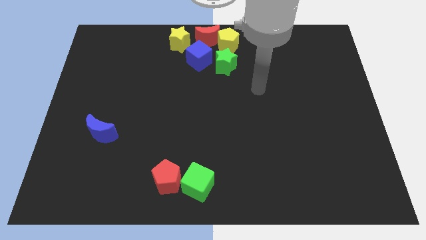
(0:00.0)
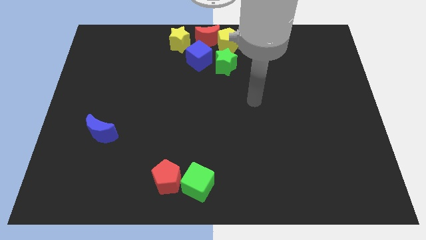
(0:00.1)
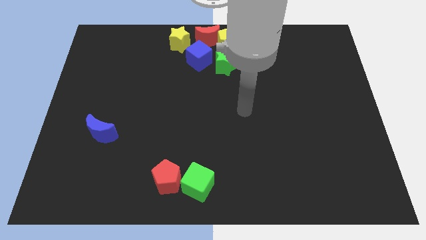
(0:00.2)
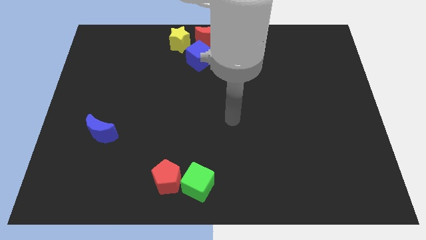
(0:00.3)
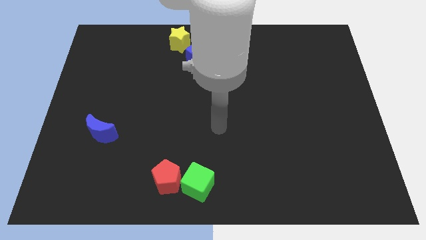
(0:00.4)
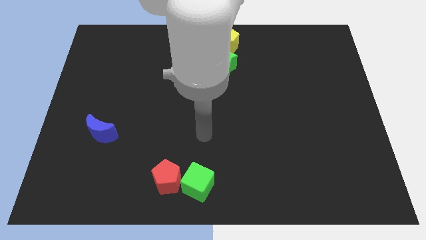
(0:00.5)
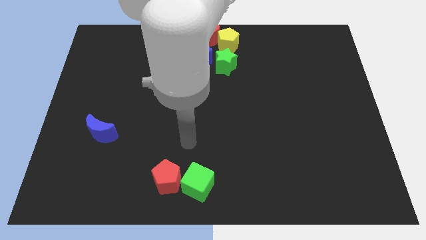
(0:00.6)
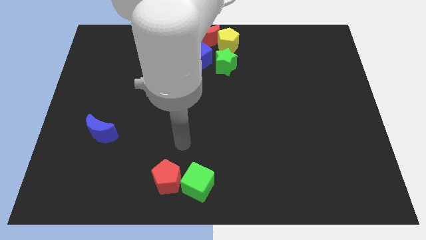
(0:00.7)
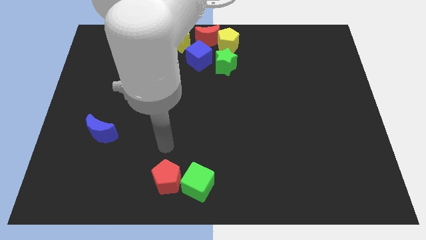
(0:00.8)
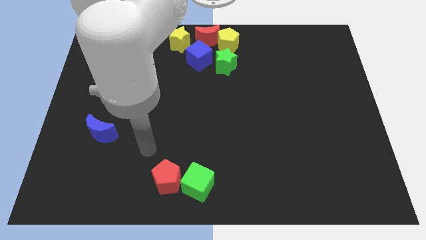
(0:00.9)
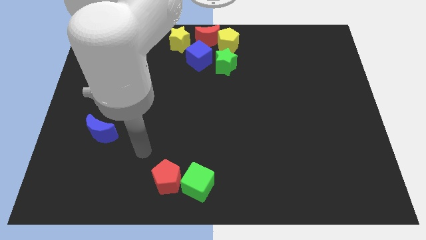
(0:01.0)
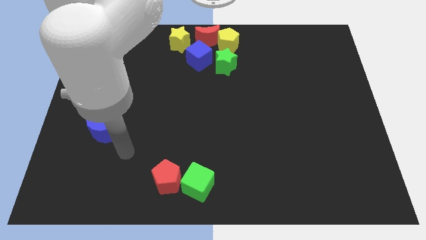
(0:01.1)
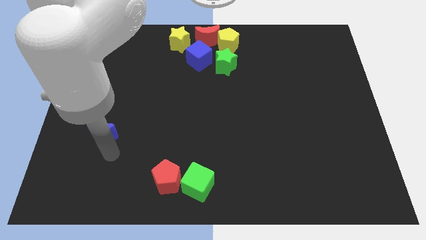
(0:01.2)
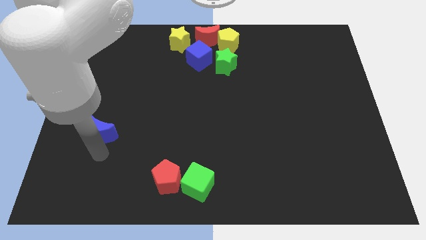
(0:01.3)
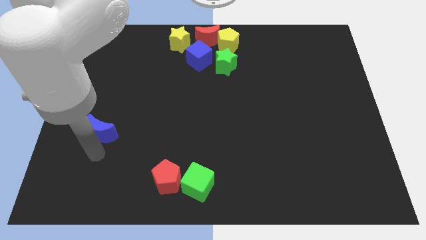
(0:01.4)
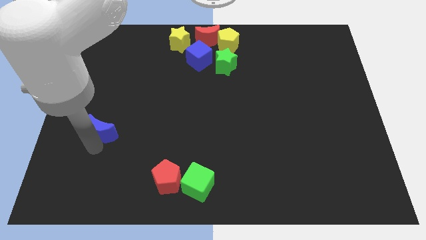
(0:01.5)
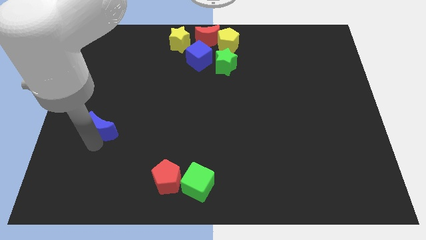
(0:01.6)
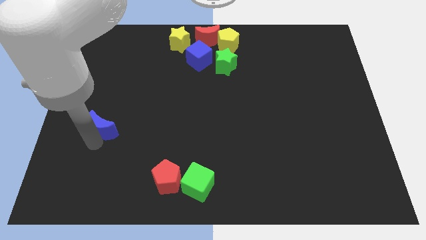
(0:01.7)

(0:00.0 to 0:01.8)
tap the blue crescent

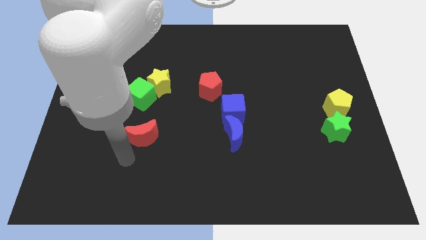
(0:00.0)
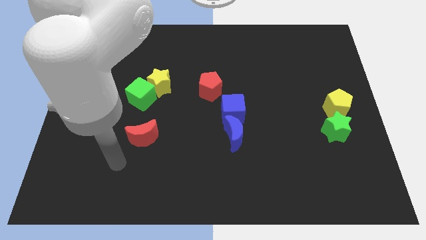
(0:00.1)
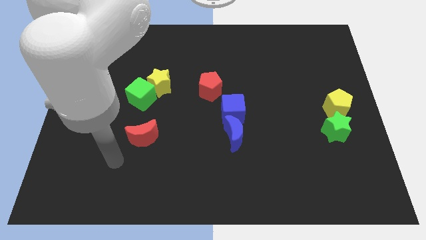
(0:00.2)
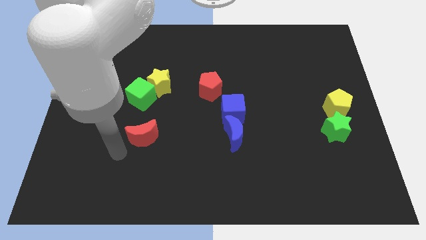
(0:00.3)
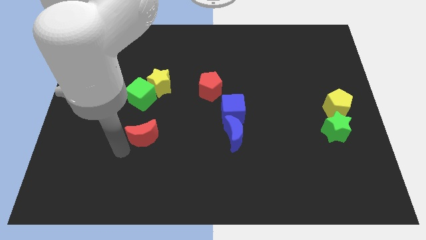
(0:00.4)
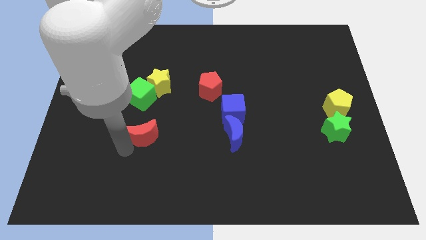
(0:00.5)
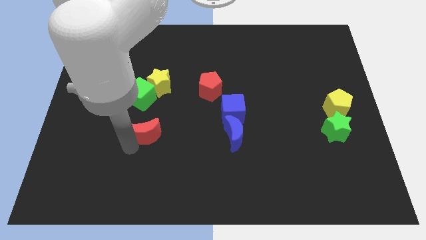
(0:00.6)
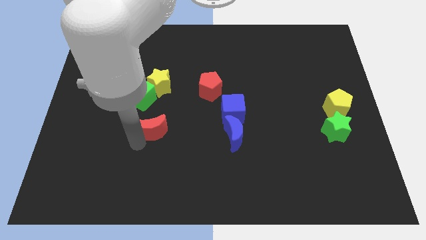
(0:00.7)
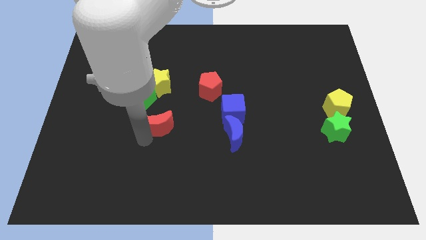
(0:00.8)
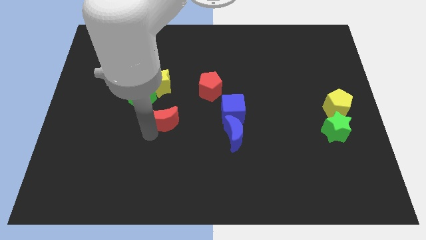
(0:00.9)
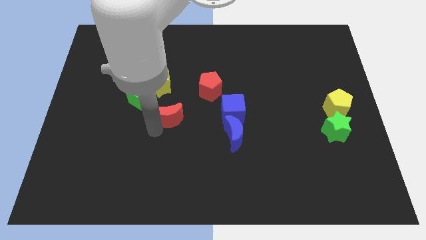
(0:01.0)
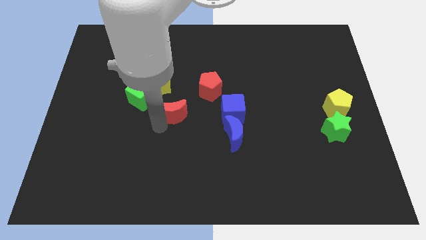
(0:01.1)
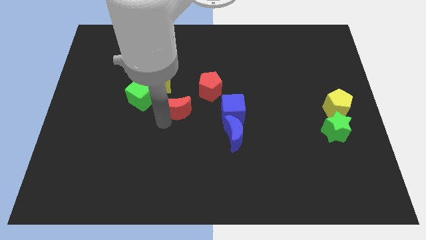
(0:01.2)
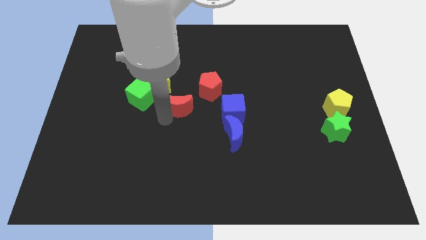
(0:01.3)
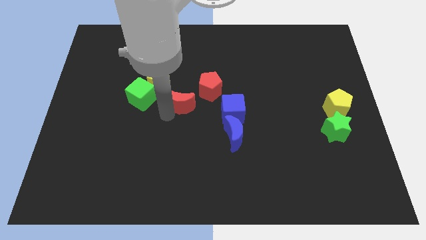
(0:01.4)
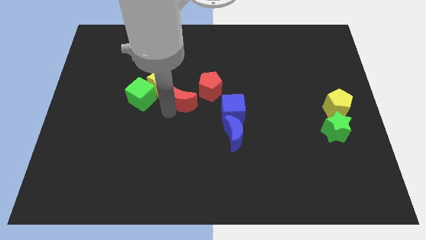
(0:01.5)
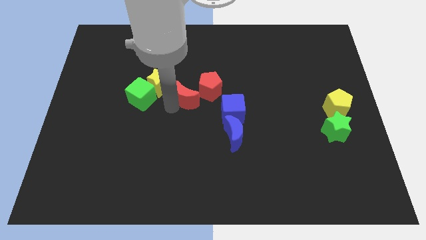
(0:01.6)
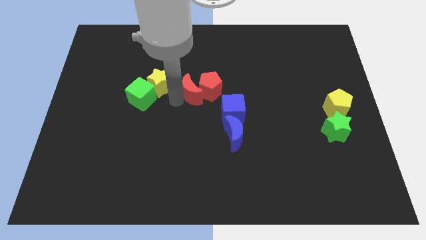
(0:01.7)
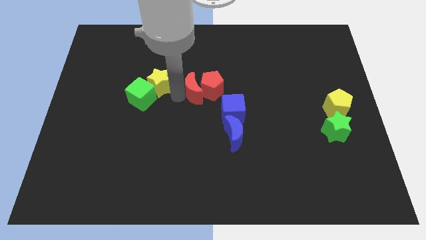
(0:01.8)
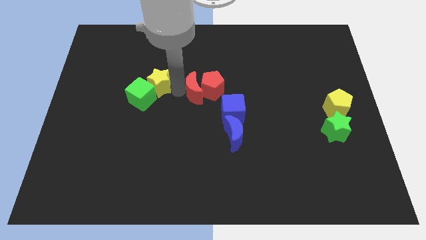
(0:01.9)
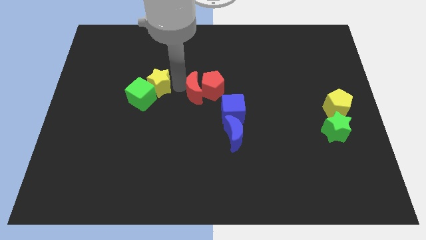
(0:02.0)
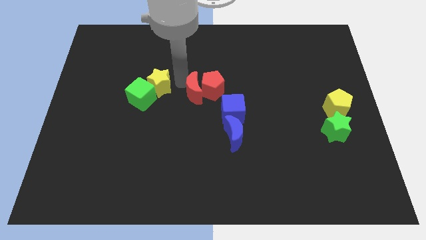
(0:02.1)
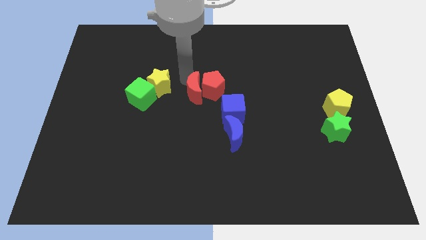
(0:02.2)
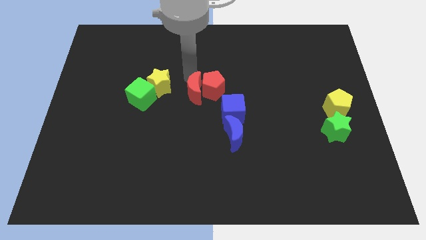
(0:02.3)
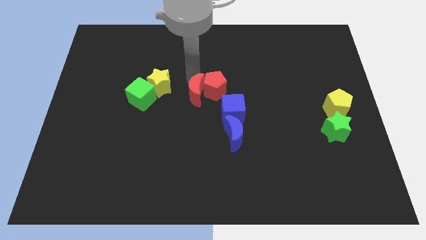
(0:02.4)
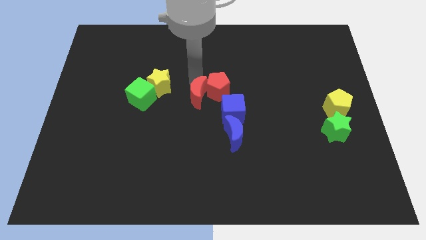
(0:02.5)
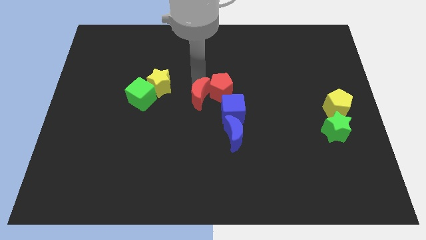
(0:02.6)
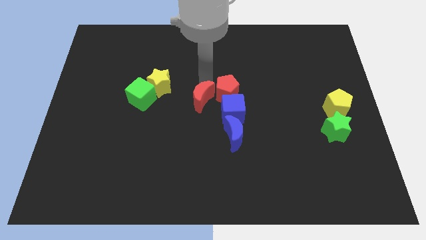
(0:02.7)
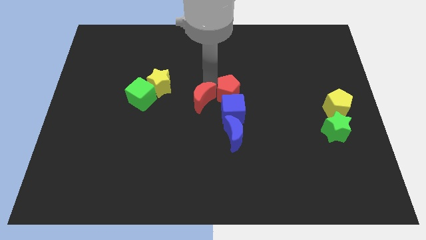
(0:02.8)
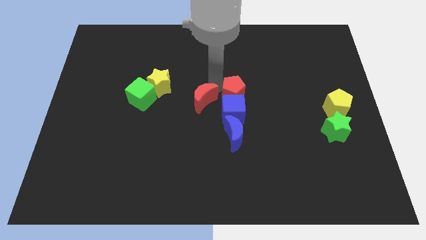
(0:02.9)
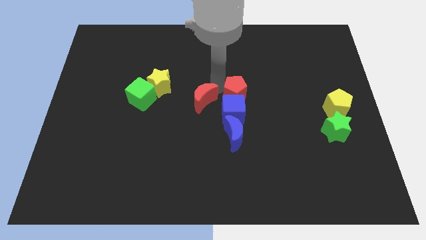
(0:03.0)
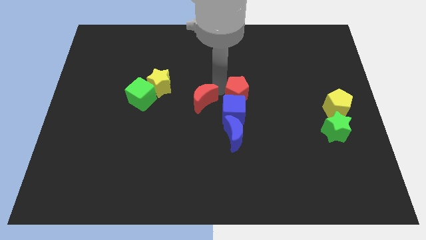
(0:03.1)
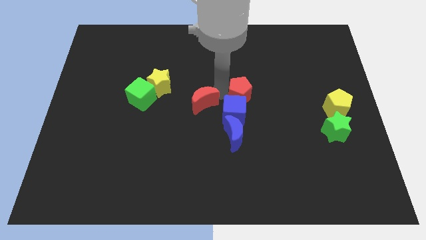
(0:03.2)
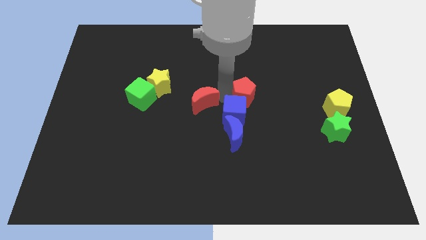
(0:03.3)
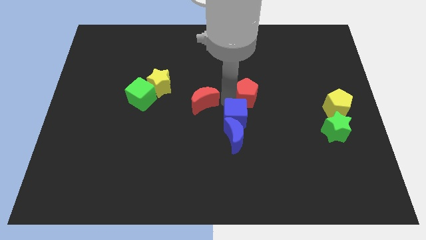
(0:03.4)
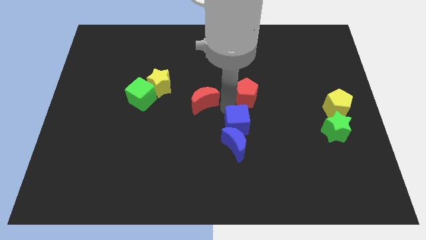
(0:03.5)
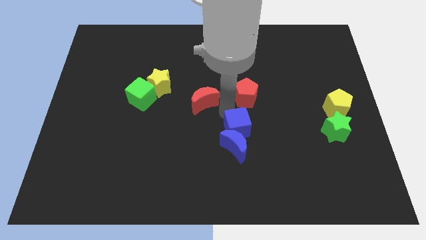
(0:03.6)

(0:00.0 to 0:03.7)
push red moon into the red pentagon

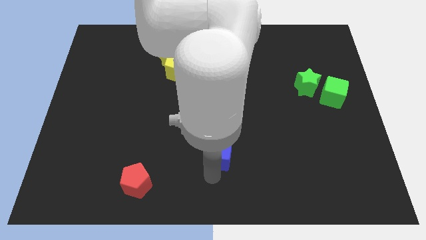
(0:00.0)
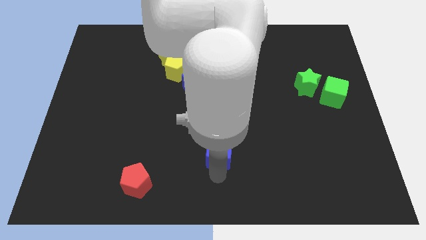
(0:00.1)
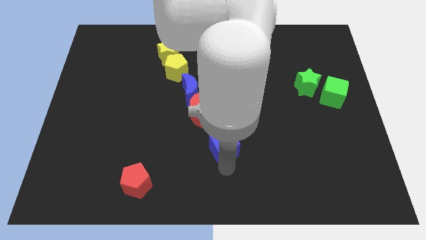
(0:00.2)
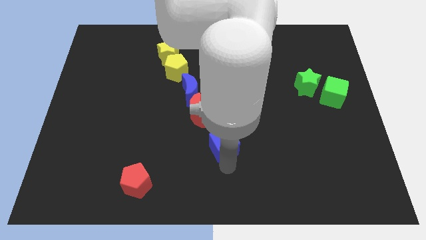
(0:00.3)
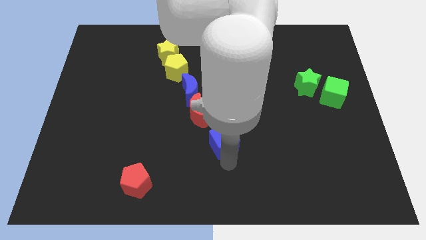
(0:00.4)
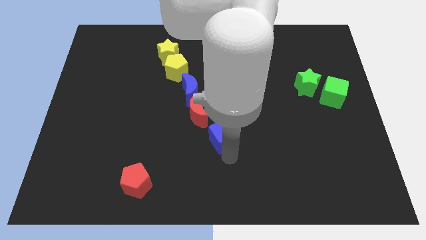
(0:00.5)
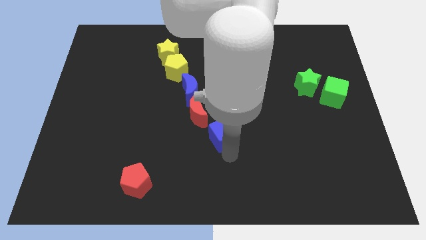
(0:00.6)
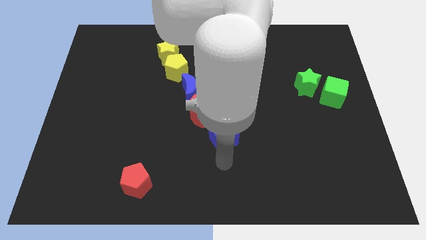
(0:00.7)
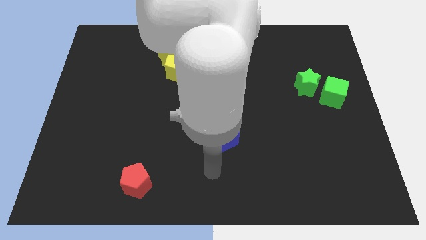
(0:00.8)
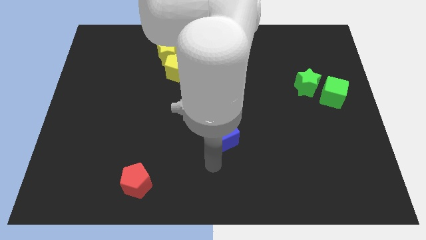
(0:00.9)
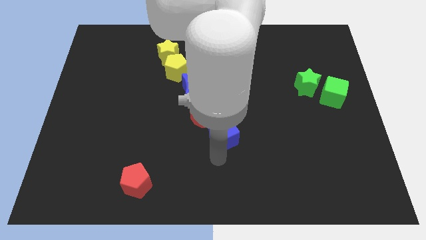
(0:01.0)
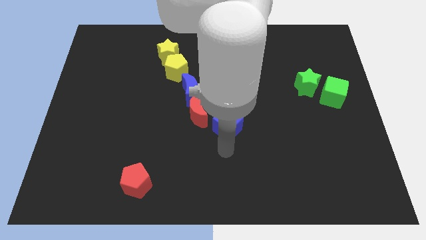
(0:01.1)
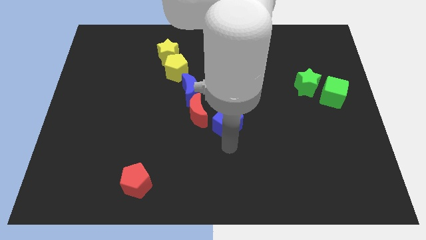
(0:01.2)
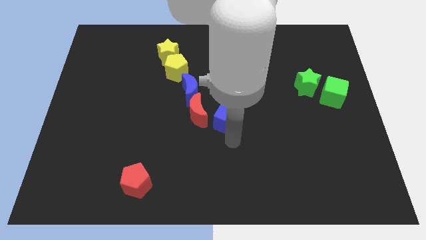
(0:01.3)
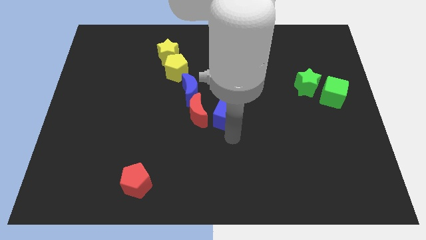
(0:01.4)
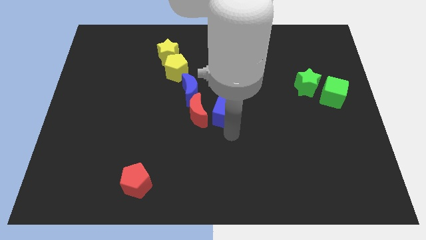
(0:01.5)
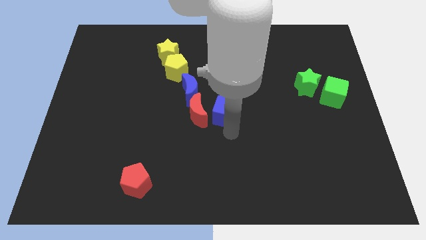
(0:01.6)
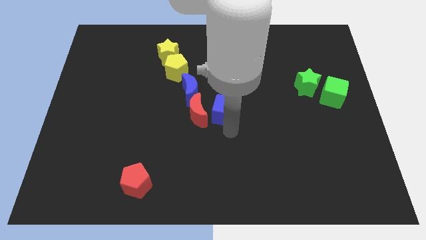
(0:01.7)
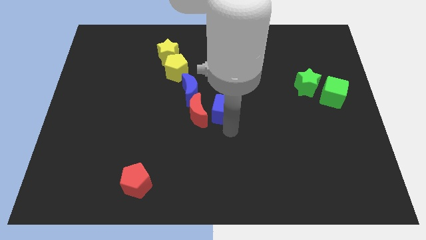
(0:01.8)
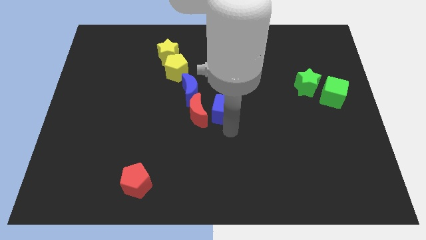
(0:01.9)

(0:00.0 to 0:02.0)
move the blue cube to the right side of the red crescent

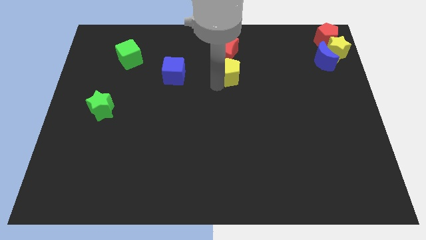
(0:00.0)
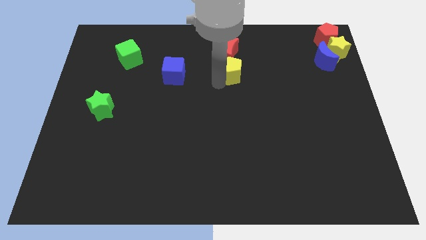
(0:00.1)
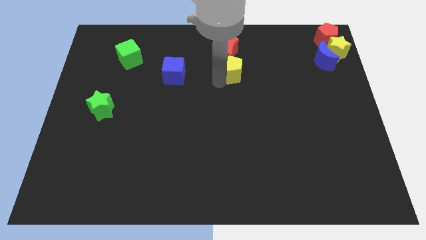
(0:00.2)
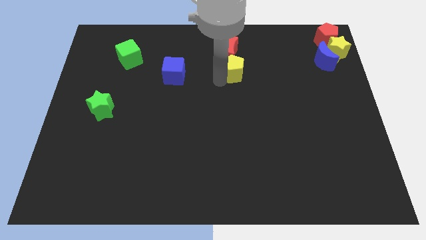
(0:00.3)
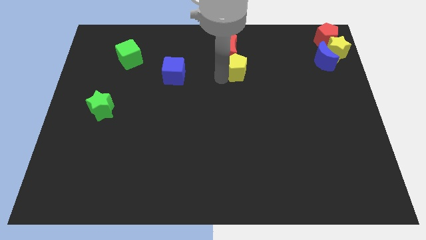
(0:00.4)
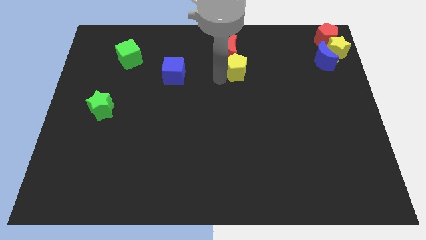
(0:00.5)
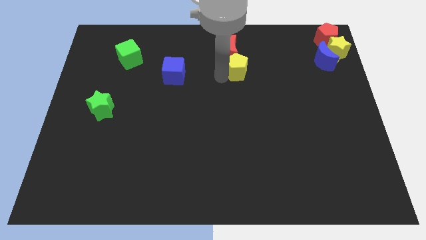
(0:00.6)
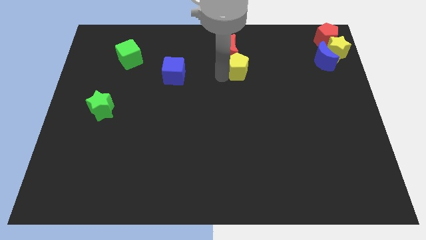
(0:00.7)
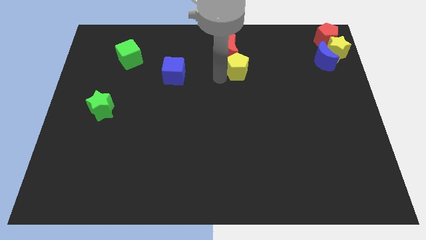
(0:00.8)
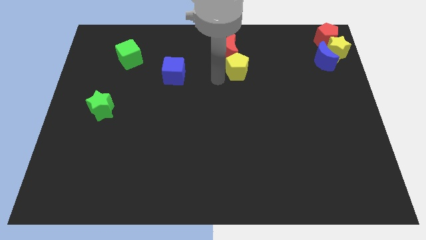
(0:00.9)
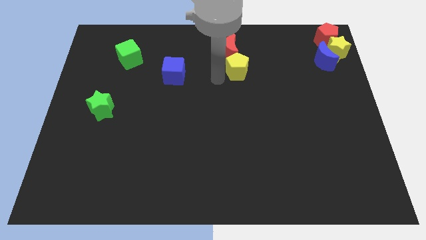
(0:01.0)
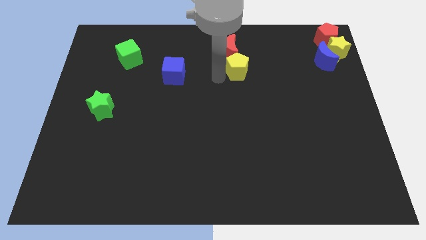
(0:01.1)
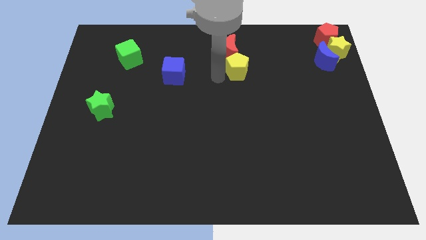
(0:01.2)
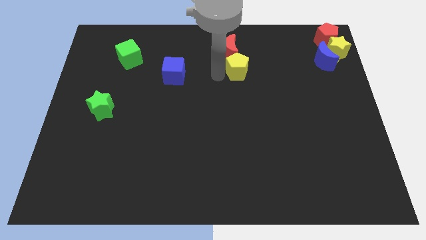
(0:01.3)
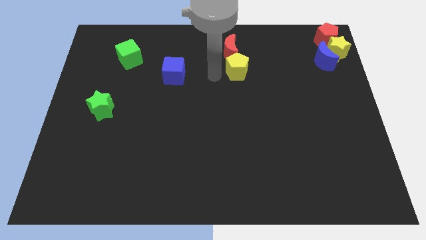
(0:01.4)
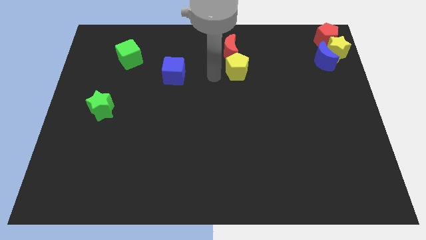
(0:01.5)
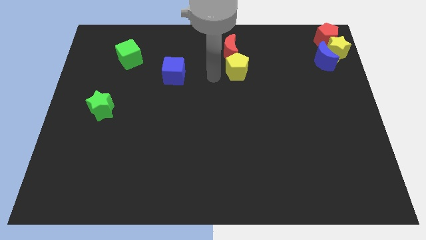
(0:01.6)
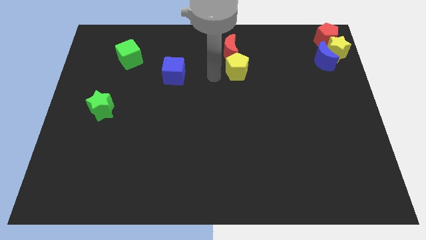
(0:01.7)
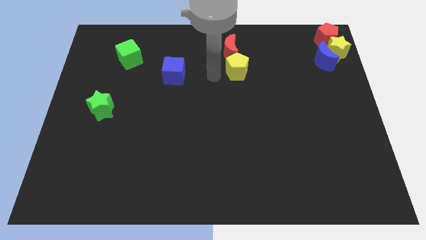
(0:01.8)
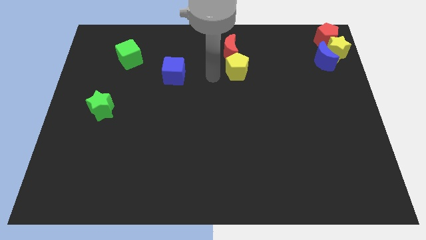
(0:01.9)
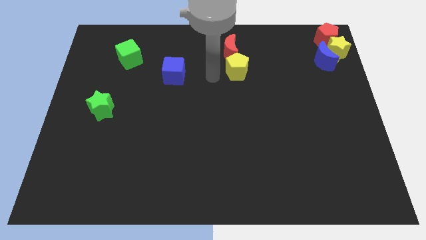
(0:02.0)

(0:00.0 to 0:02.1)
push the yellow pentagon into the red crescent
